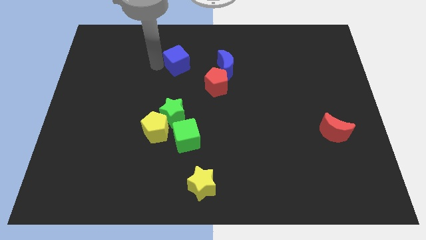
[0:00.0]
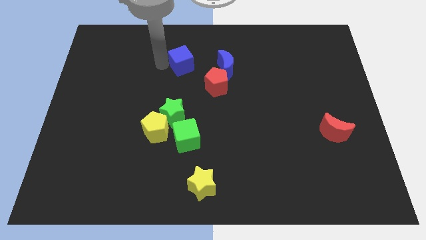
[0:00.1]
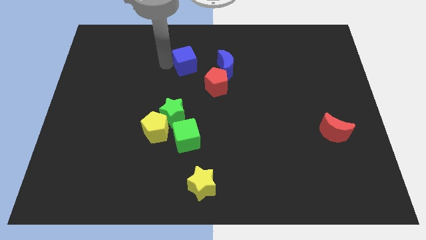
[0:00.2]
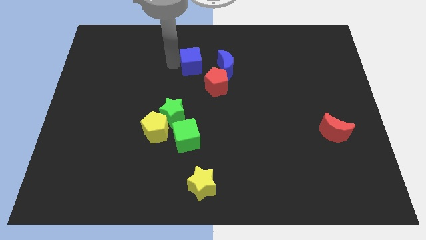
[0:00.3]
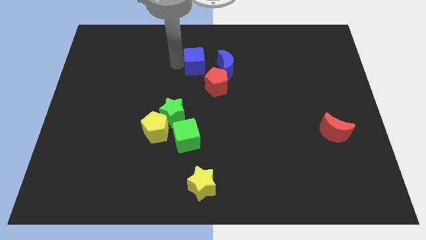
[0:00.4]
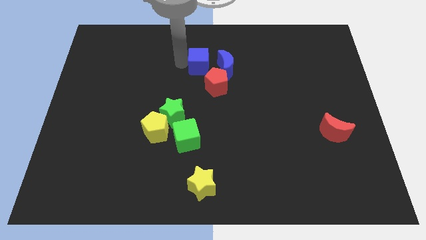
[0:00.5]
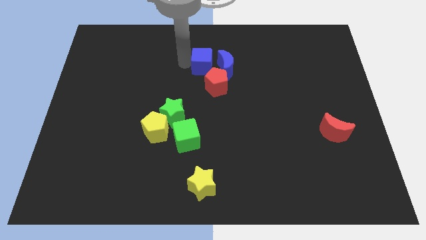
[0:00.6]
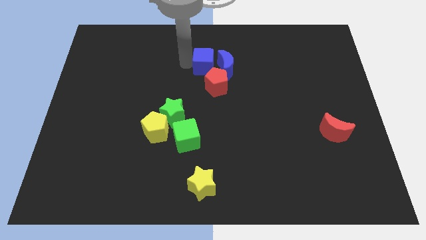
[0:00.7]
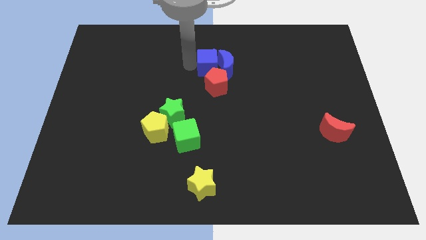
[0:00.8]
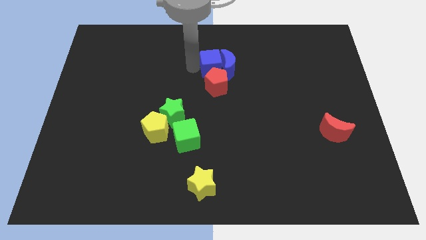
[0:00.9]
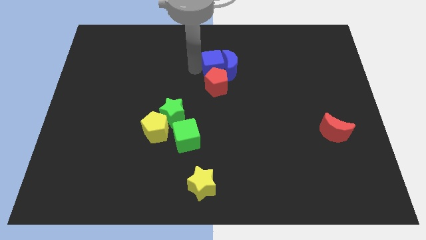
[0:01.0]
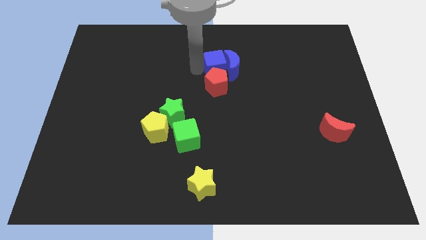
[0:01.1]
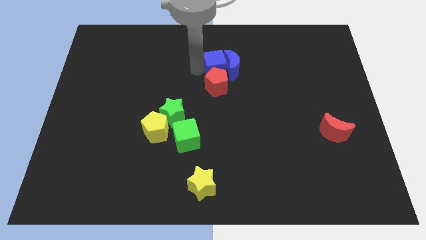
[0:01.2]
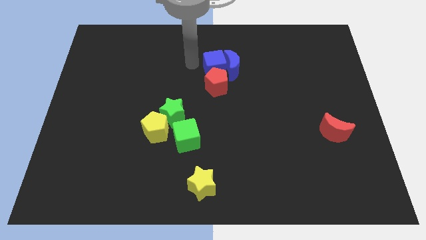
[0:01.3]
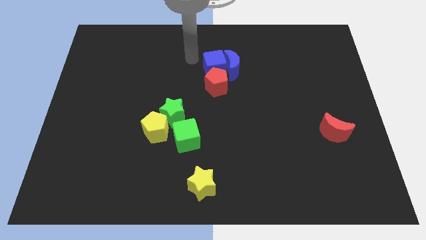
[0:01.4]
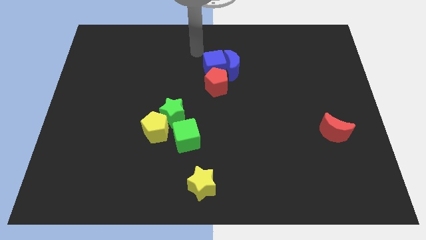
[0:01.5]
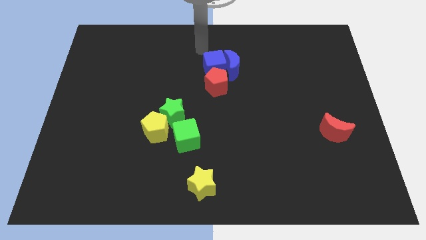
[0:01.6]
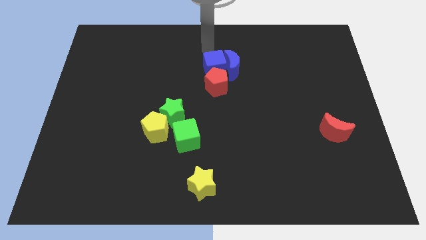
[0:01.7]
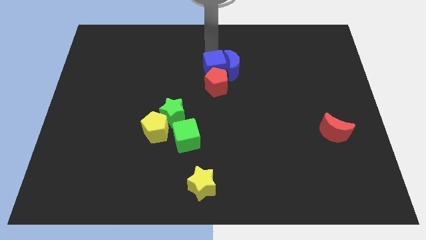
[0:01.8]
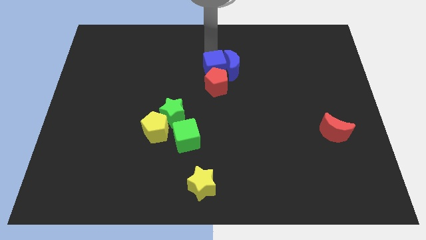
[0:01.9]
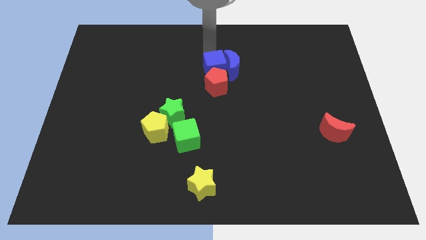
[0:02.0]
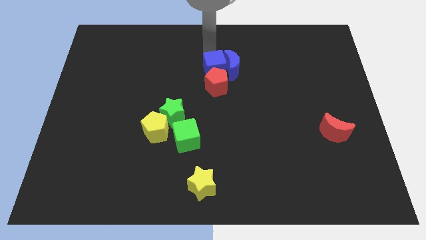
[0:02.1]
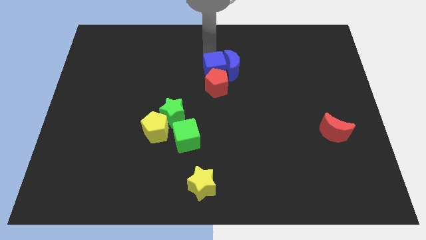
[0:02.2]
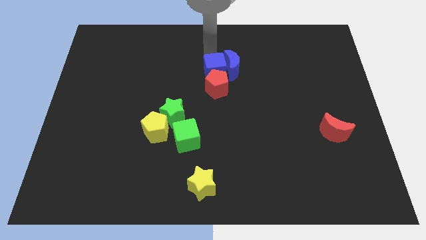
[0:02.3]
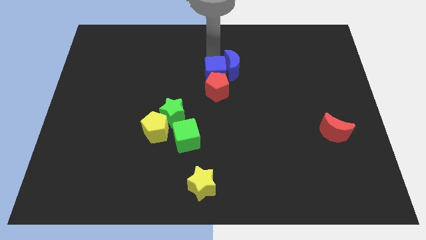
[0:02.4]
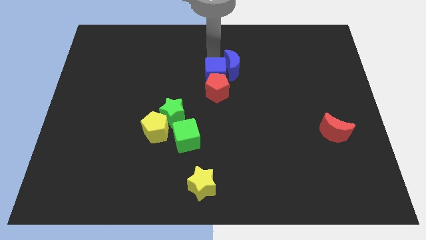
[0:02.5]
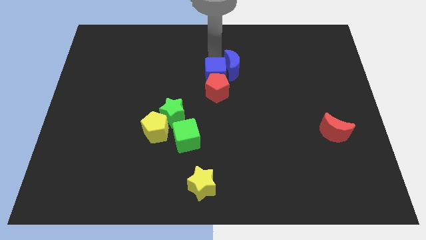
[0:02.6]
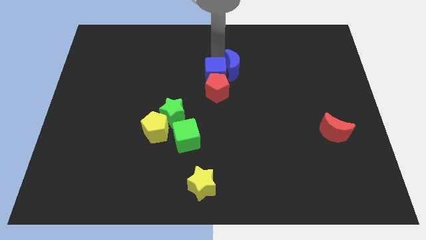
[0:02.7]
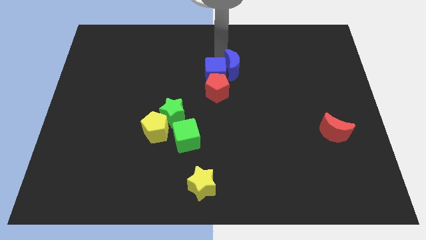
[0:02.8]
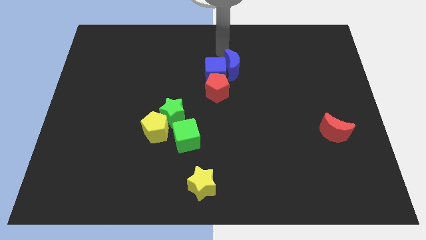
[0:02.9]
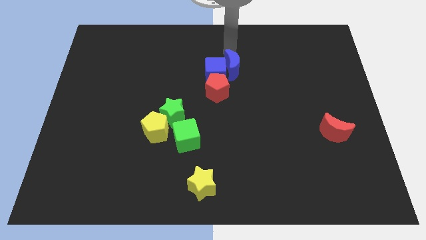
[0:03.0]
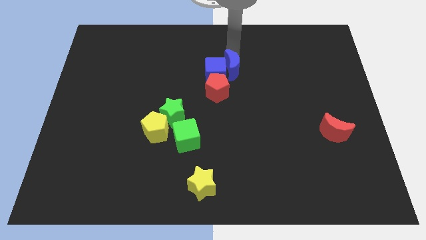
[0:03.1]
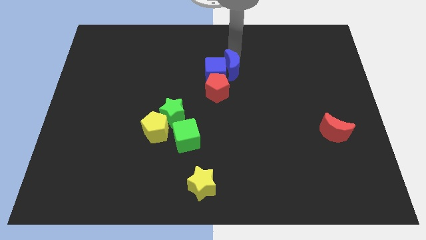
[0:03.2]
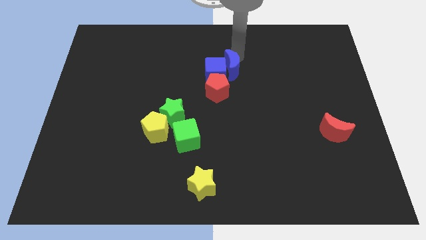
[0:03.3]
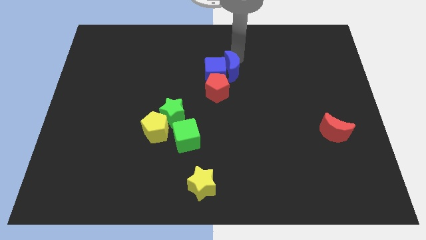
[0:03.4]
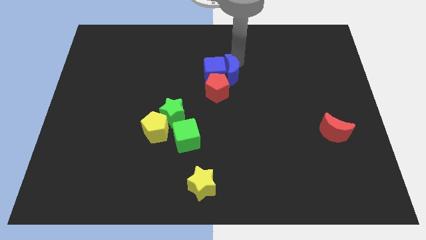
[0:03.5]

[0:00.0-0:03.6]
push blue cube towards blue moon

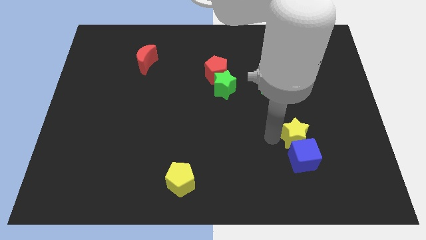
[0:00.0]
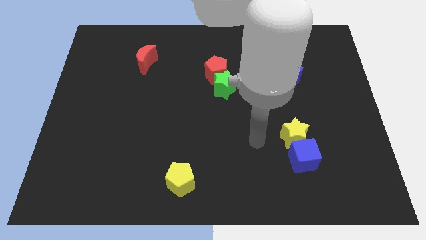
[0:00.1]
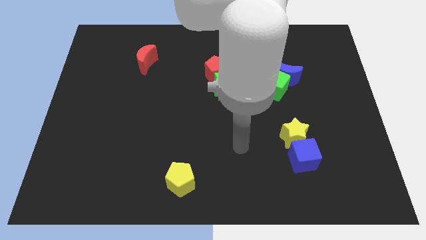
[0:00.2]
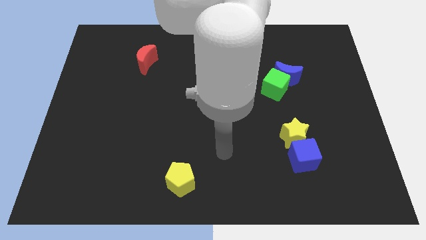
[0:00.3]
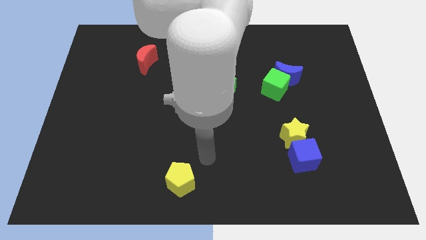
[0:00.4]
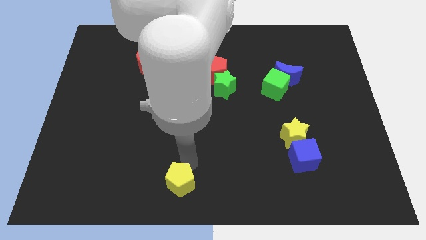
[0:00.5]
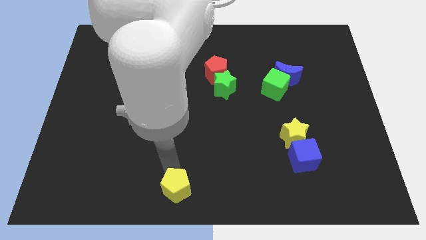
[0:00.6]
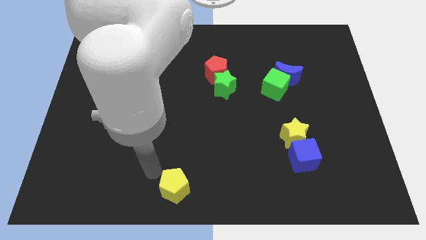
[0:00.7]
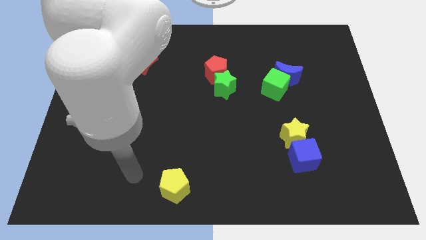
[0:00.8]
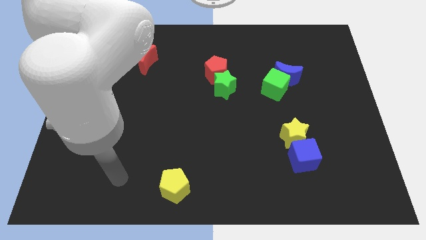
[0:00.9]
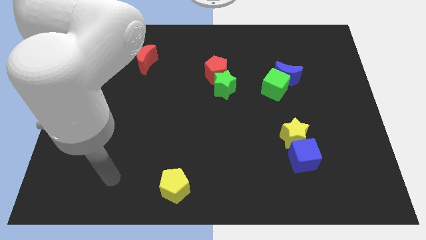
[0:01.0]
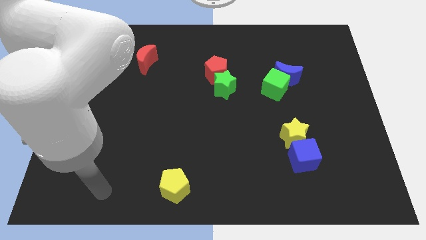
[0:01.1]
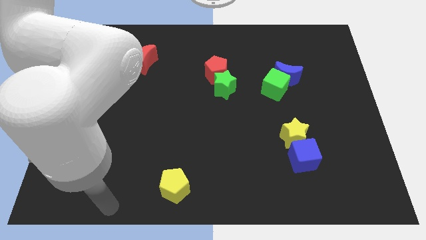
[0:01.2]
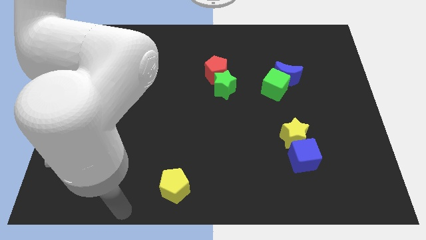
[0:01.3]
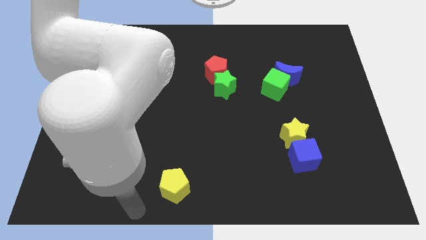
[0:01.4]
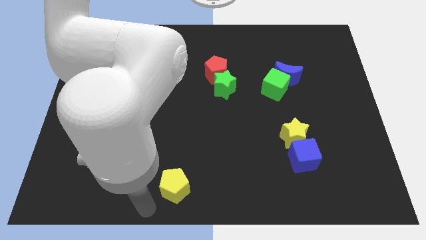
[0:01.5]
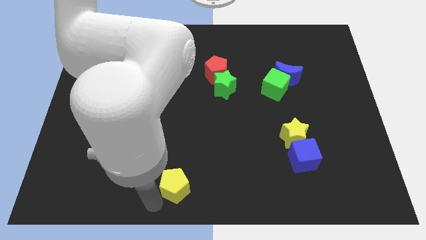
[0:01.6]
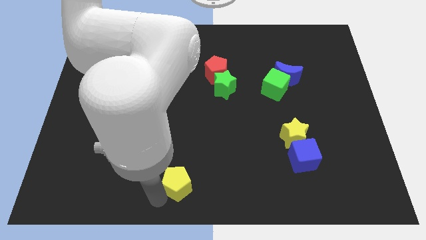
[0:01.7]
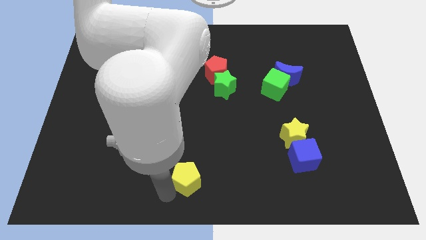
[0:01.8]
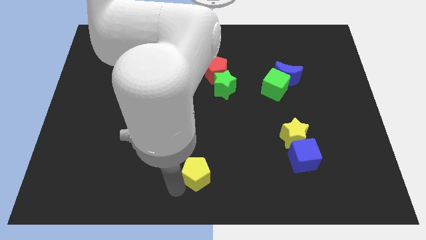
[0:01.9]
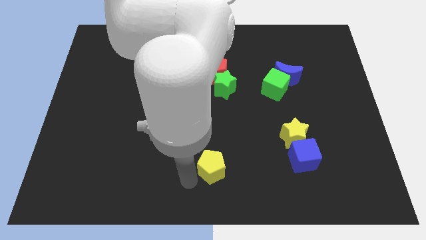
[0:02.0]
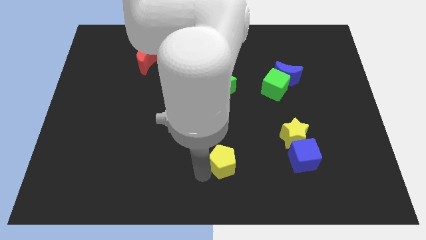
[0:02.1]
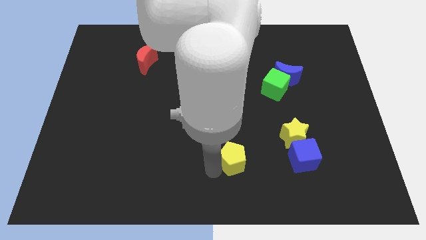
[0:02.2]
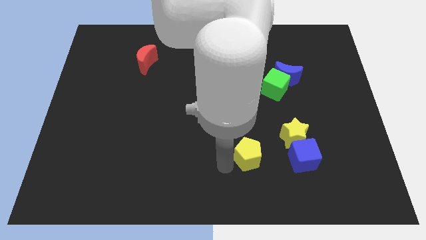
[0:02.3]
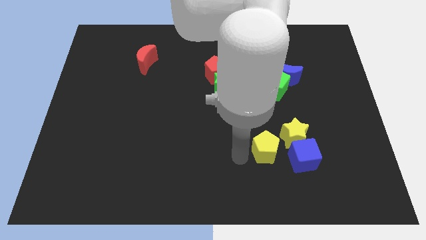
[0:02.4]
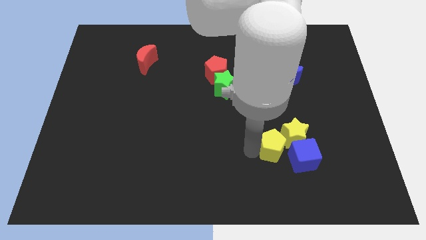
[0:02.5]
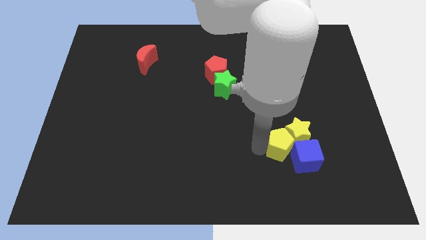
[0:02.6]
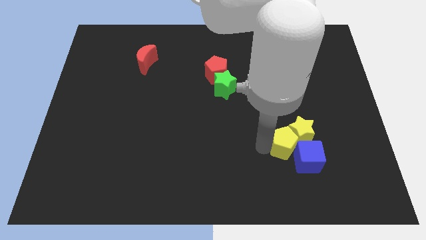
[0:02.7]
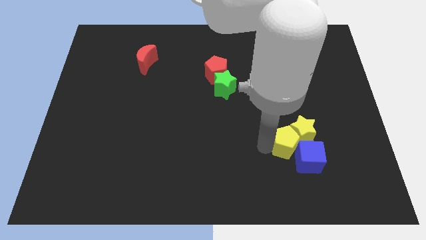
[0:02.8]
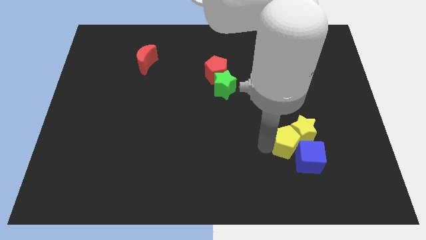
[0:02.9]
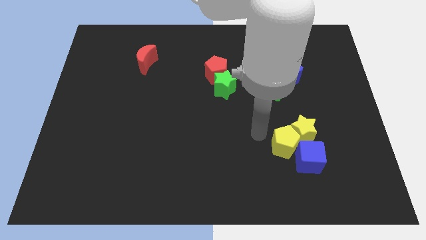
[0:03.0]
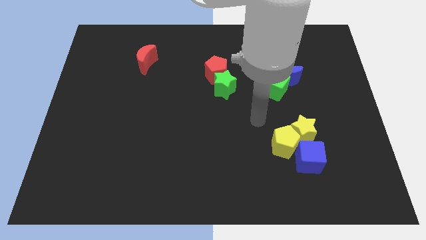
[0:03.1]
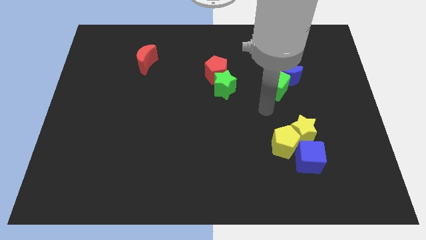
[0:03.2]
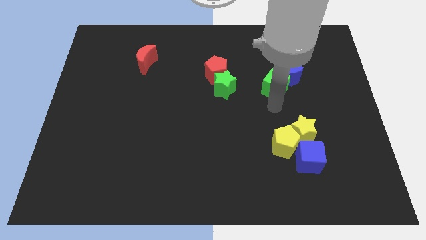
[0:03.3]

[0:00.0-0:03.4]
push the yellow pentagon into the yellow star

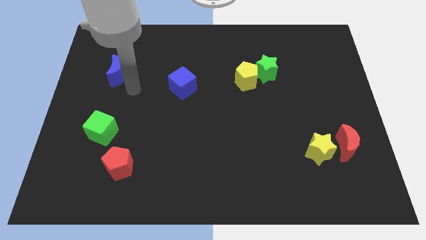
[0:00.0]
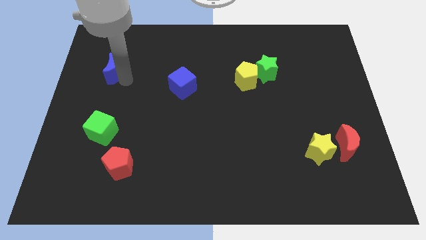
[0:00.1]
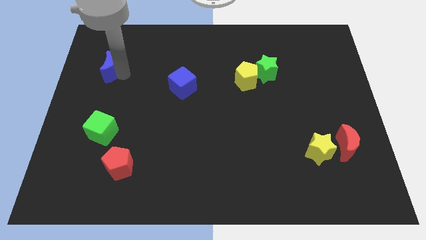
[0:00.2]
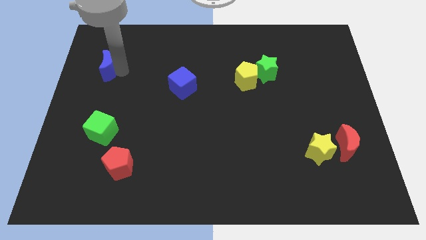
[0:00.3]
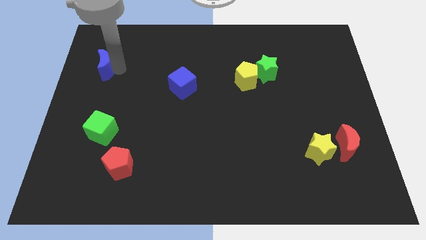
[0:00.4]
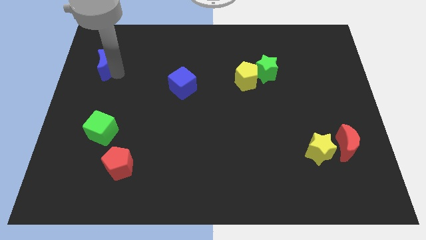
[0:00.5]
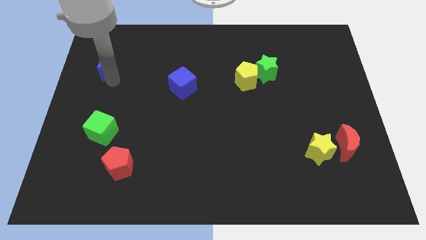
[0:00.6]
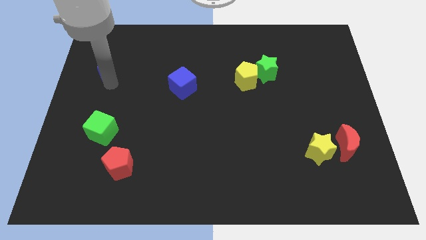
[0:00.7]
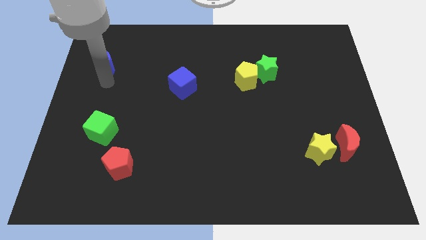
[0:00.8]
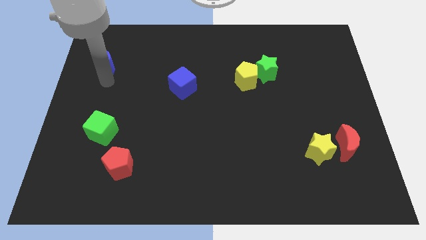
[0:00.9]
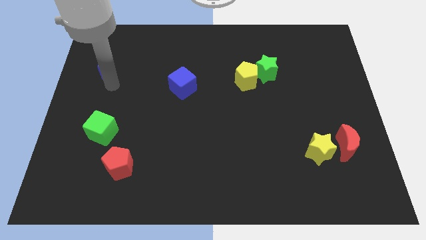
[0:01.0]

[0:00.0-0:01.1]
place the blue moon diagonally to green cube

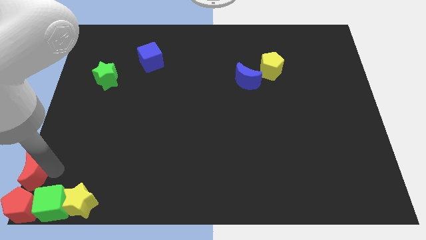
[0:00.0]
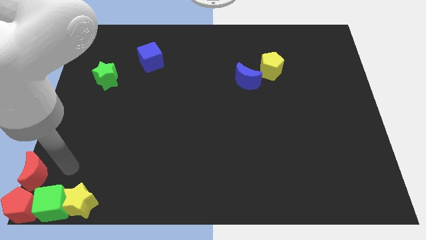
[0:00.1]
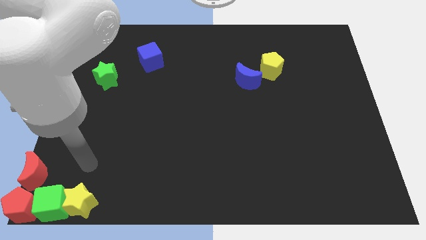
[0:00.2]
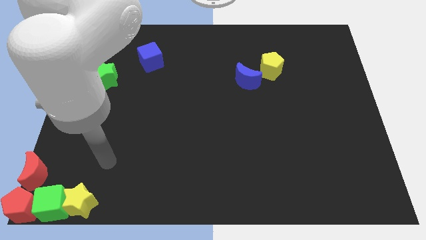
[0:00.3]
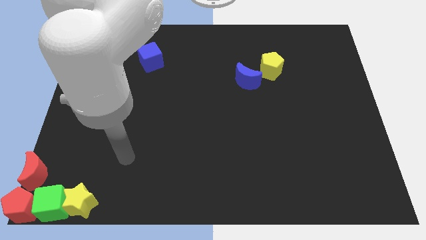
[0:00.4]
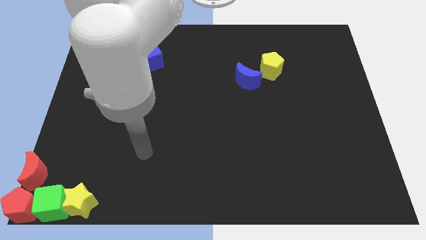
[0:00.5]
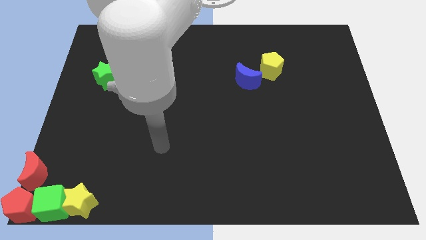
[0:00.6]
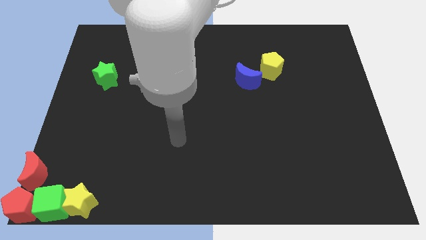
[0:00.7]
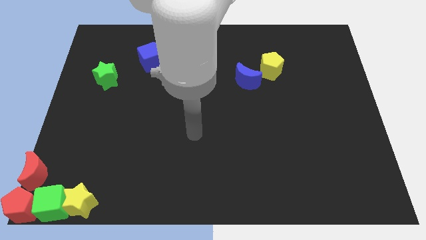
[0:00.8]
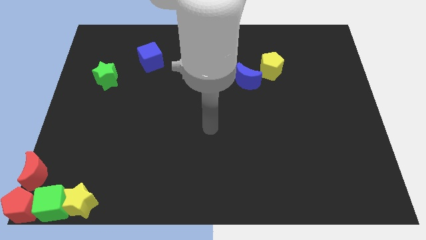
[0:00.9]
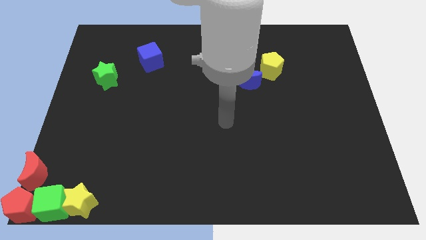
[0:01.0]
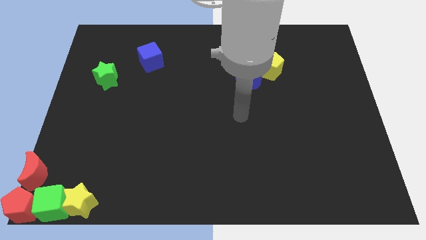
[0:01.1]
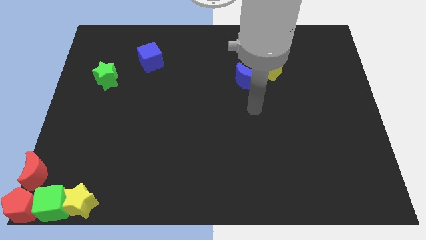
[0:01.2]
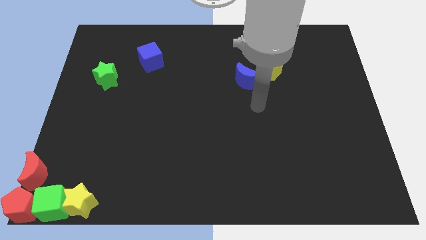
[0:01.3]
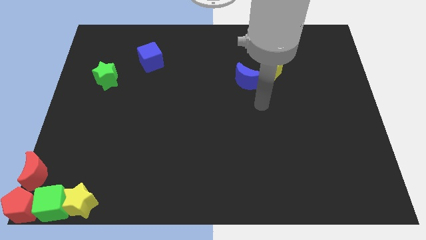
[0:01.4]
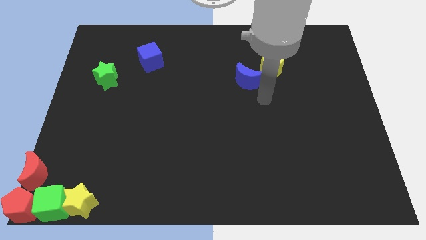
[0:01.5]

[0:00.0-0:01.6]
place your arm at the bottom right side of blue crescent
